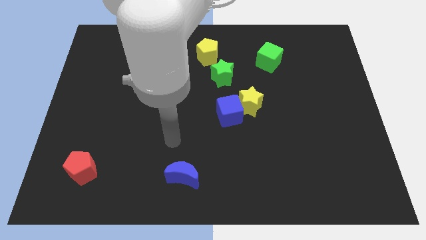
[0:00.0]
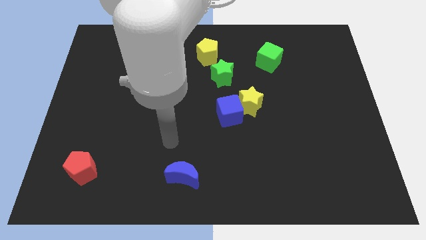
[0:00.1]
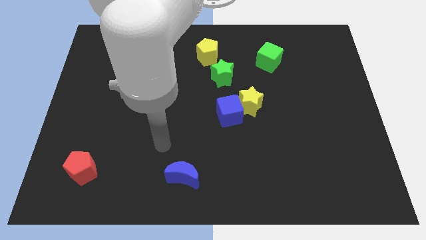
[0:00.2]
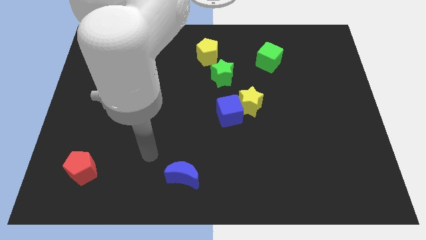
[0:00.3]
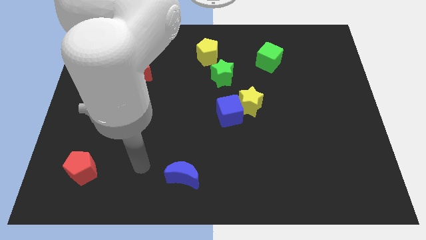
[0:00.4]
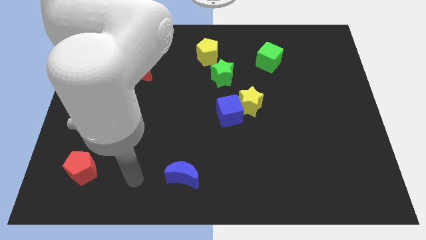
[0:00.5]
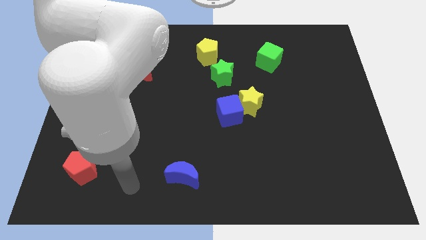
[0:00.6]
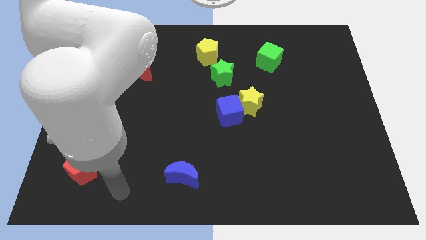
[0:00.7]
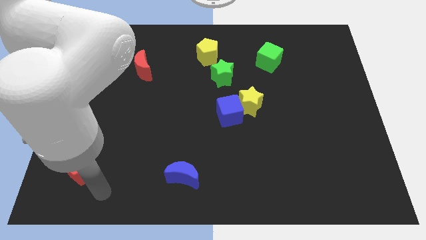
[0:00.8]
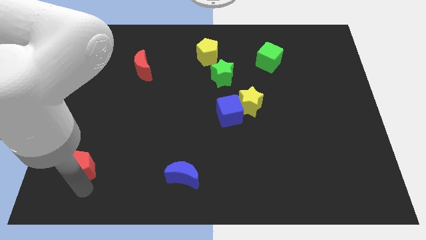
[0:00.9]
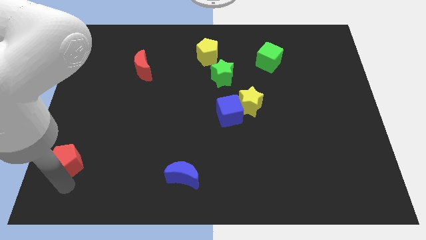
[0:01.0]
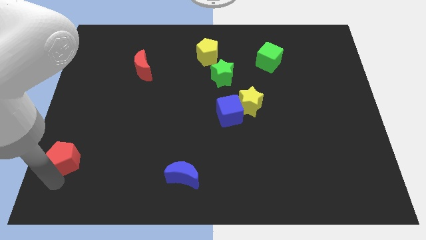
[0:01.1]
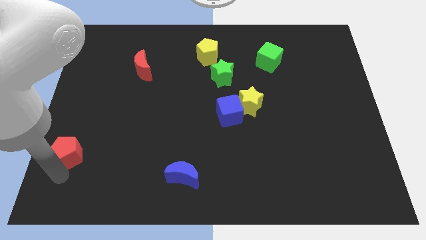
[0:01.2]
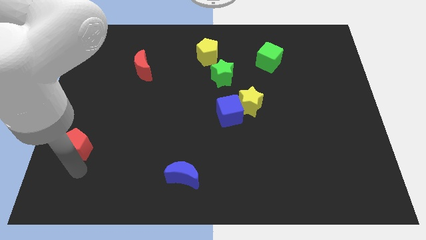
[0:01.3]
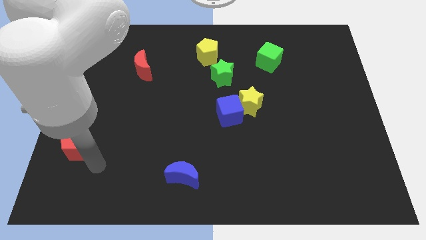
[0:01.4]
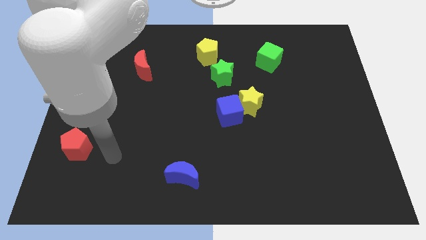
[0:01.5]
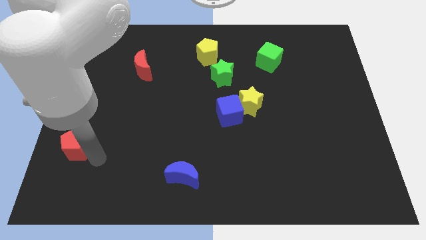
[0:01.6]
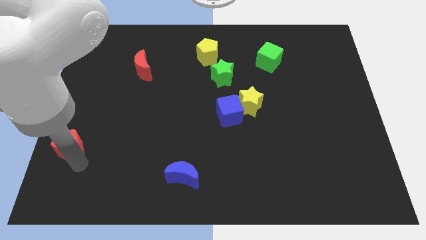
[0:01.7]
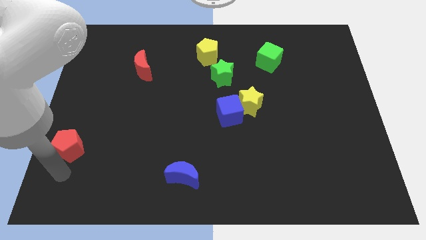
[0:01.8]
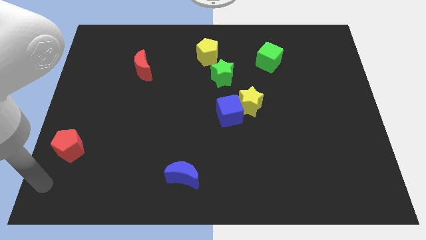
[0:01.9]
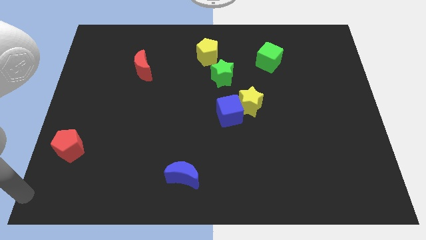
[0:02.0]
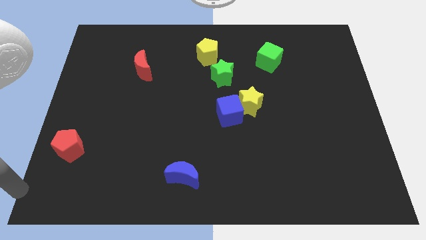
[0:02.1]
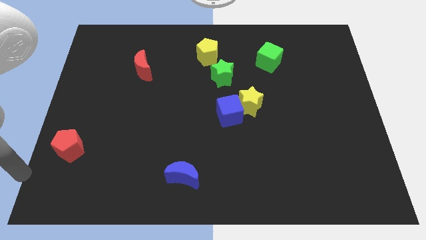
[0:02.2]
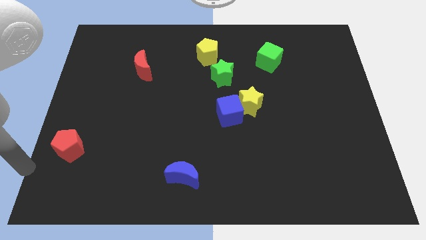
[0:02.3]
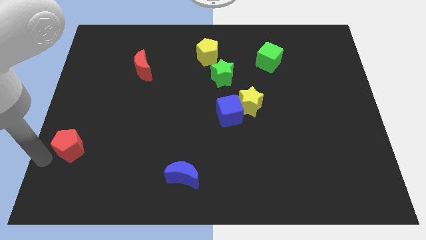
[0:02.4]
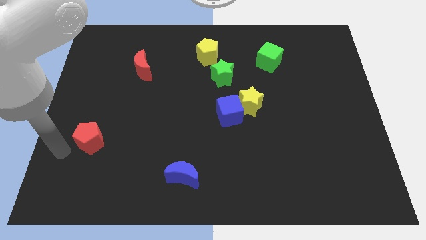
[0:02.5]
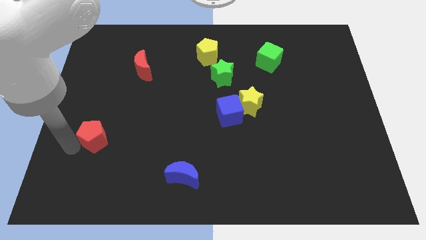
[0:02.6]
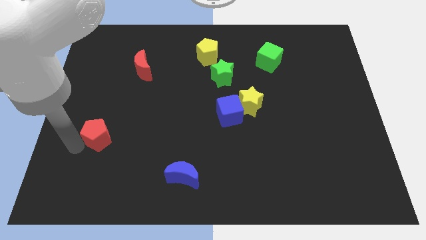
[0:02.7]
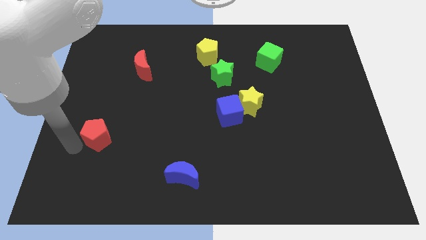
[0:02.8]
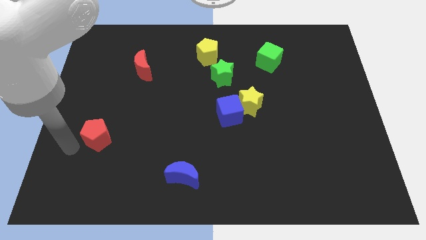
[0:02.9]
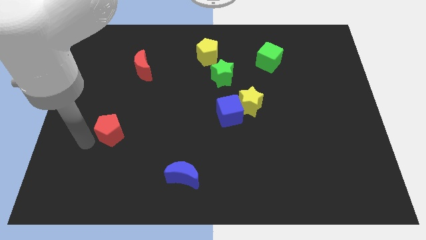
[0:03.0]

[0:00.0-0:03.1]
slide red pentagon diagonal to blue moon

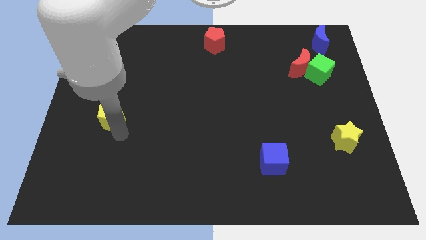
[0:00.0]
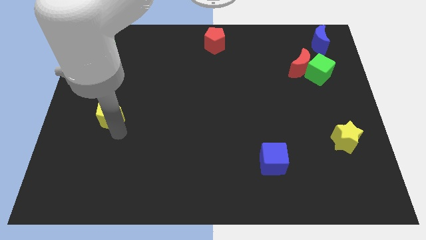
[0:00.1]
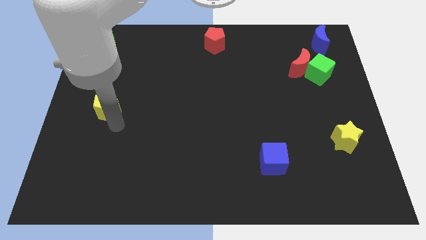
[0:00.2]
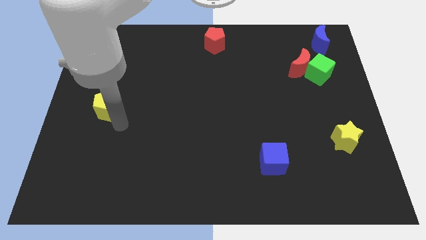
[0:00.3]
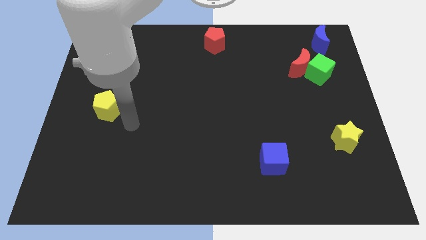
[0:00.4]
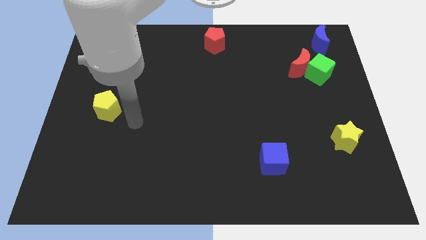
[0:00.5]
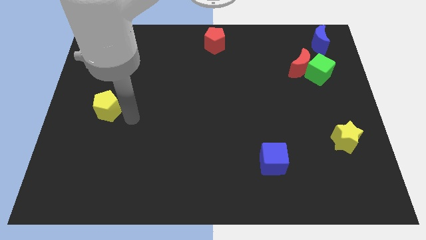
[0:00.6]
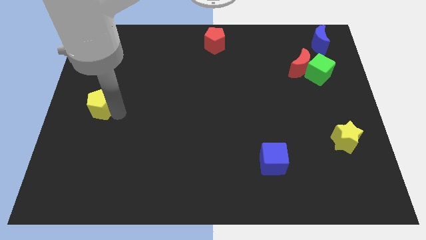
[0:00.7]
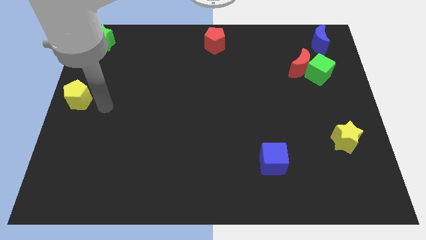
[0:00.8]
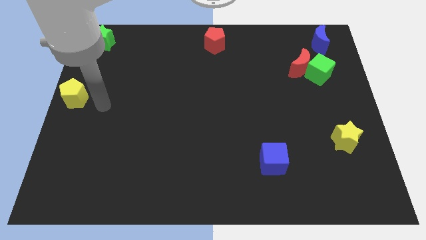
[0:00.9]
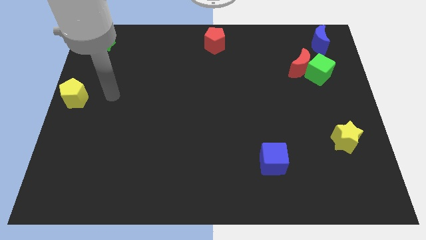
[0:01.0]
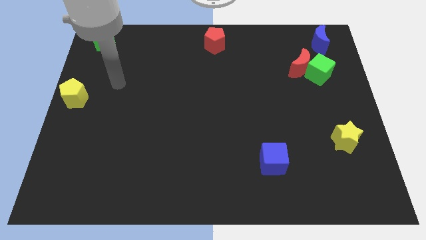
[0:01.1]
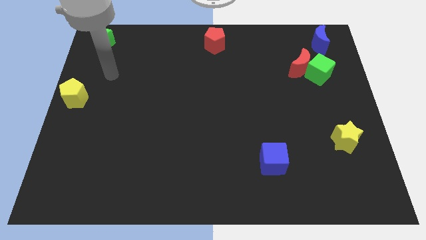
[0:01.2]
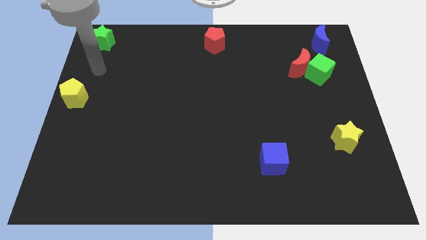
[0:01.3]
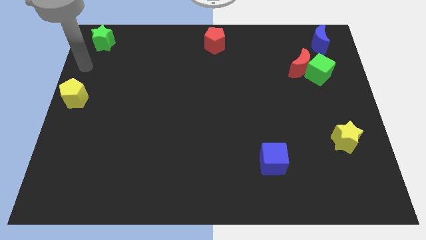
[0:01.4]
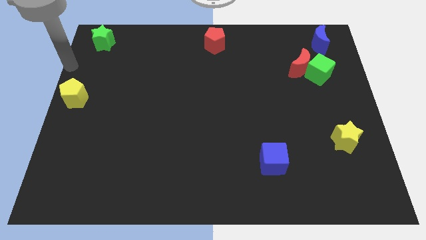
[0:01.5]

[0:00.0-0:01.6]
move the yellow pentagon to the center left of the board

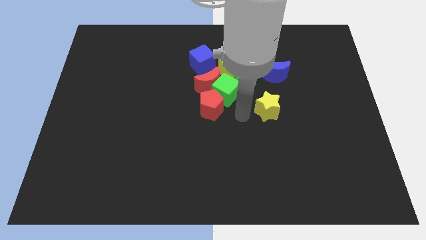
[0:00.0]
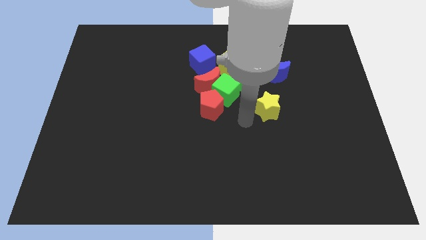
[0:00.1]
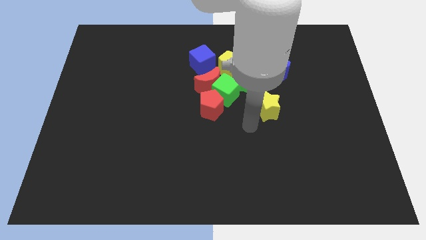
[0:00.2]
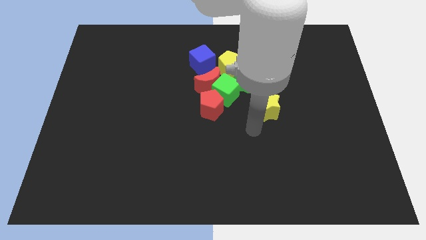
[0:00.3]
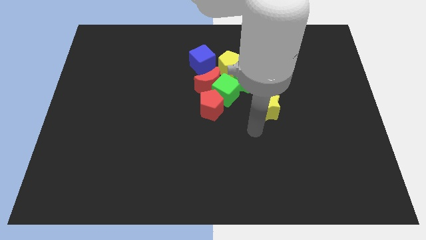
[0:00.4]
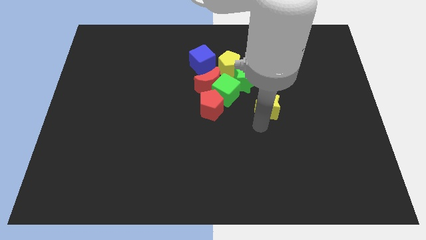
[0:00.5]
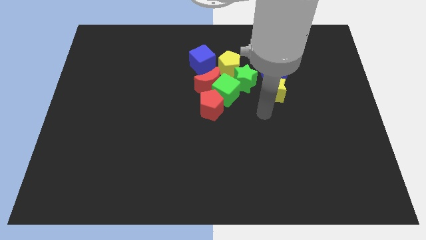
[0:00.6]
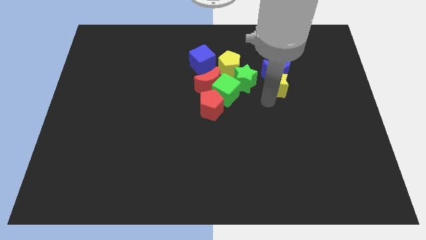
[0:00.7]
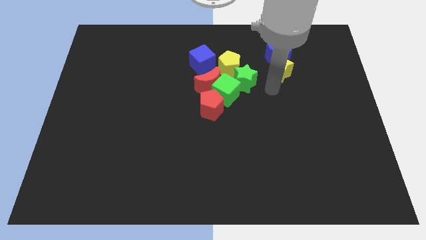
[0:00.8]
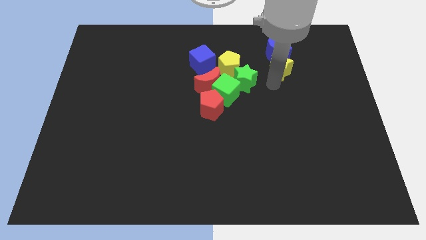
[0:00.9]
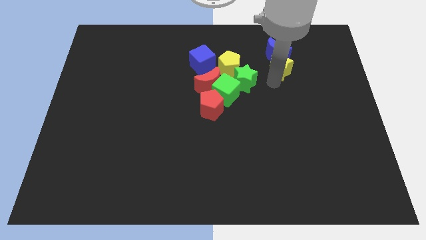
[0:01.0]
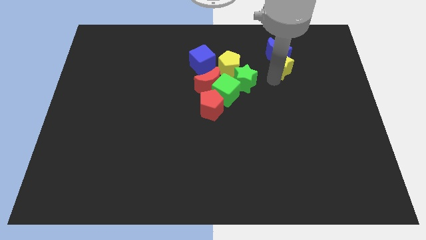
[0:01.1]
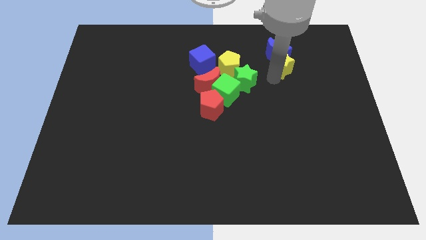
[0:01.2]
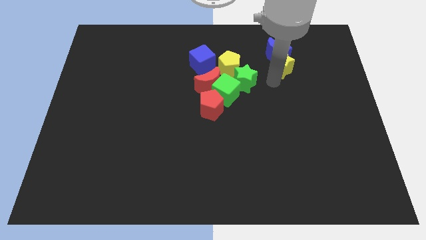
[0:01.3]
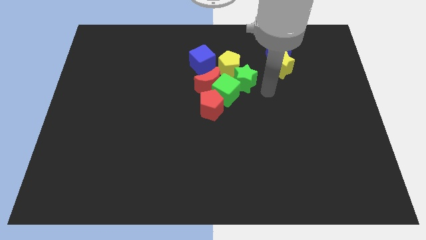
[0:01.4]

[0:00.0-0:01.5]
move the yellow star into the blue moon

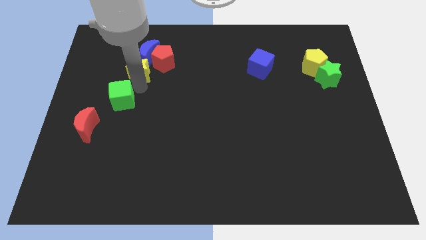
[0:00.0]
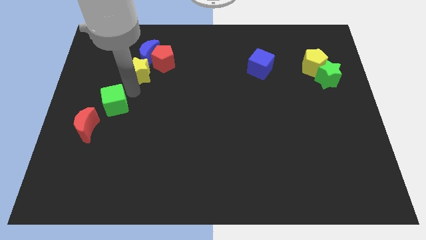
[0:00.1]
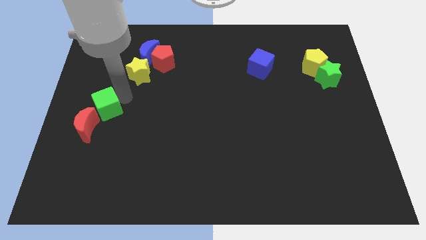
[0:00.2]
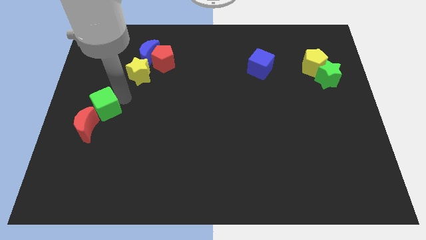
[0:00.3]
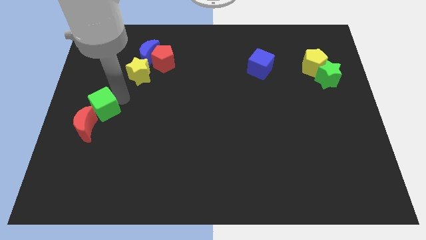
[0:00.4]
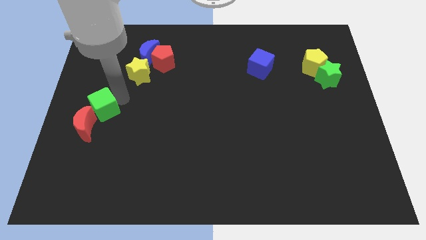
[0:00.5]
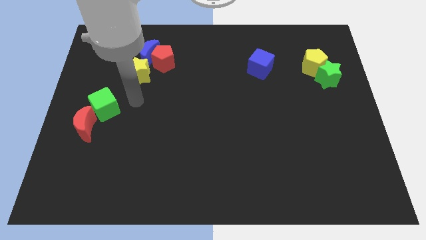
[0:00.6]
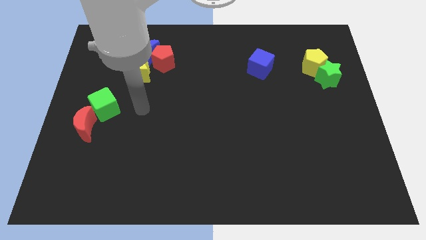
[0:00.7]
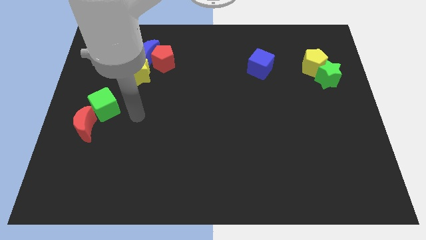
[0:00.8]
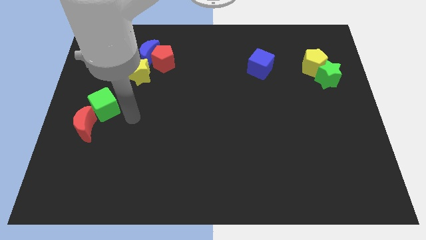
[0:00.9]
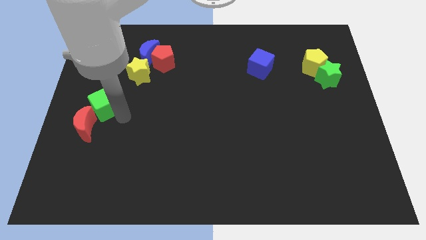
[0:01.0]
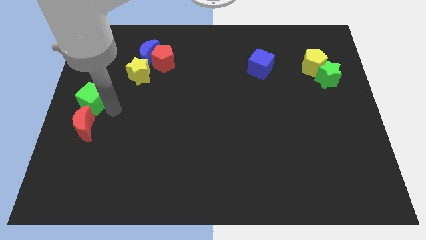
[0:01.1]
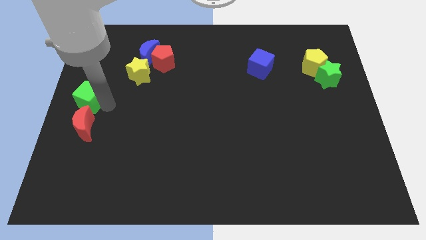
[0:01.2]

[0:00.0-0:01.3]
move the green cube to the top of the red crescent

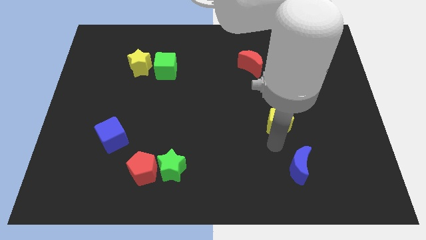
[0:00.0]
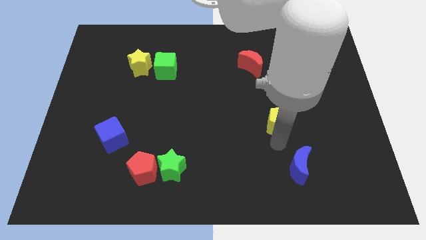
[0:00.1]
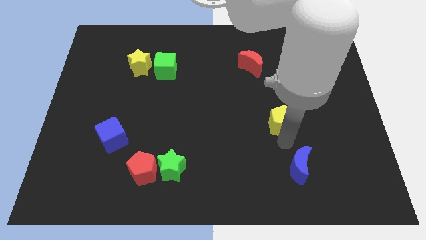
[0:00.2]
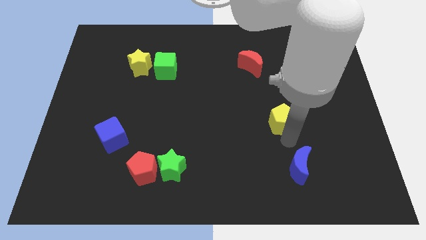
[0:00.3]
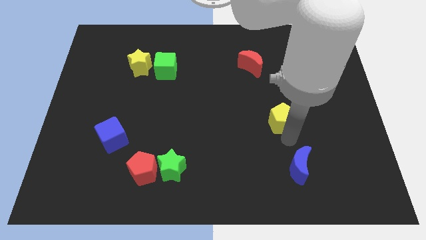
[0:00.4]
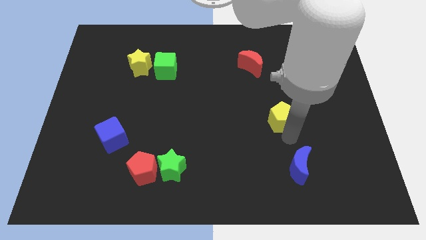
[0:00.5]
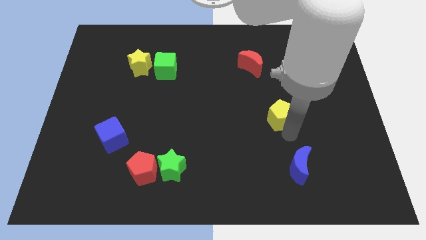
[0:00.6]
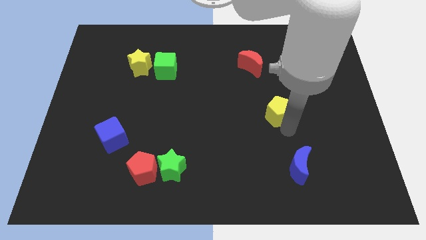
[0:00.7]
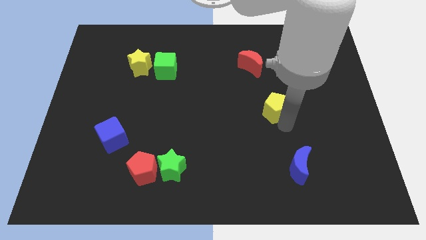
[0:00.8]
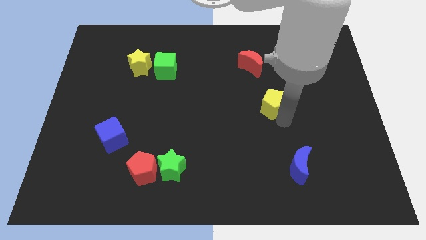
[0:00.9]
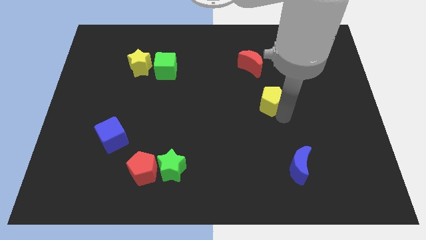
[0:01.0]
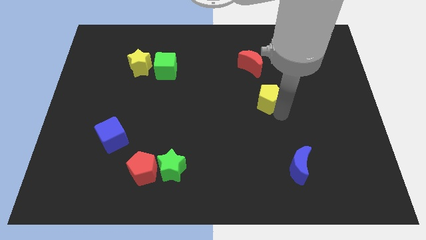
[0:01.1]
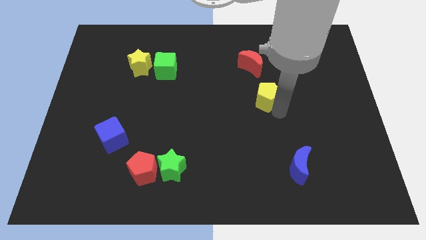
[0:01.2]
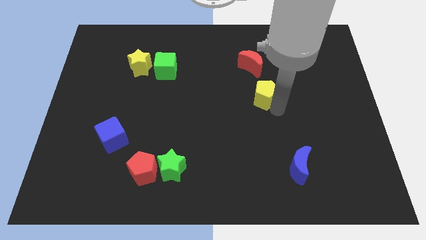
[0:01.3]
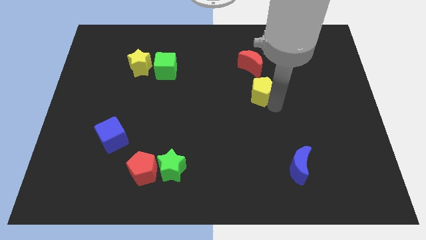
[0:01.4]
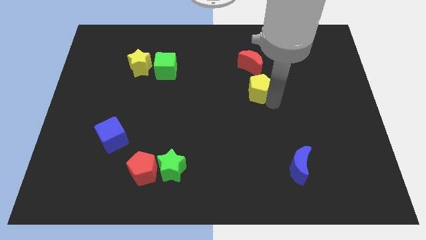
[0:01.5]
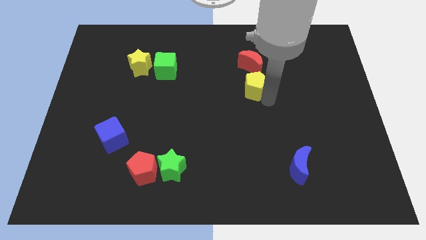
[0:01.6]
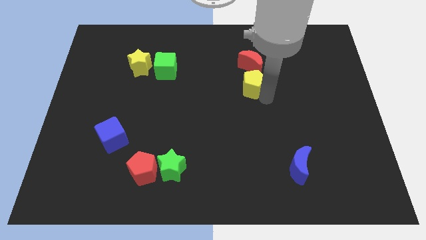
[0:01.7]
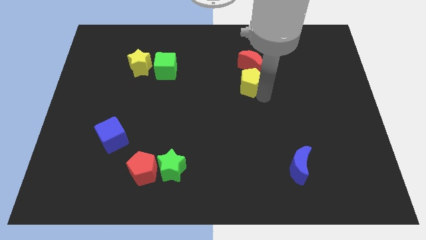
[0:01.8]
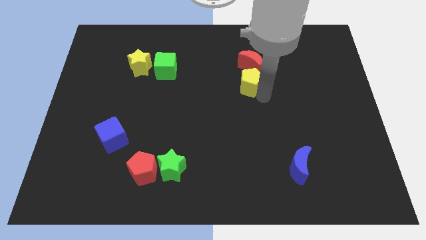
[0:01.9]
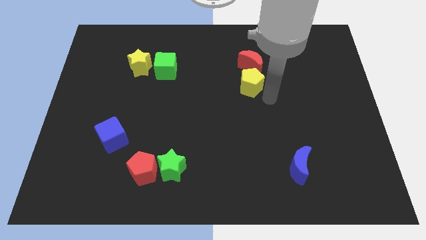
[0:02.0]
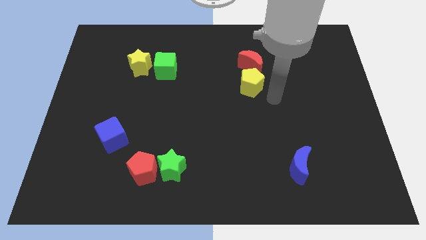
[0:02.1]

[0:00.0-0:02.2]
drag yellow pentagon near red crescent
